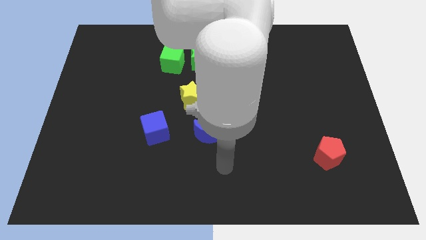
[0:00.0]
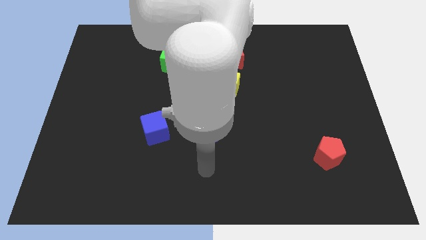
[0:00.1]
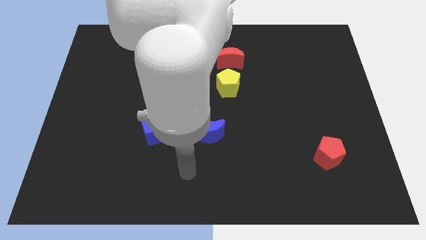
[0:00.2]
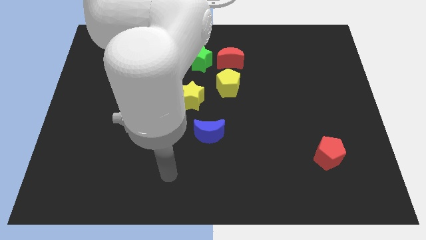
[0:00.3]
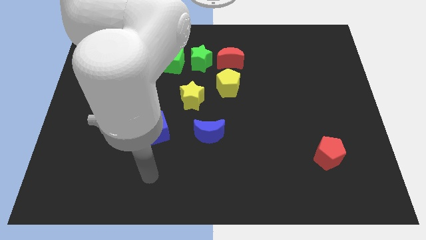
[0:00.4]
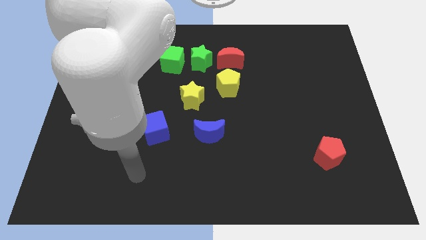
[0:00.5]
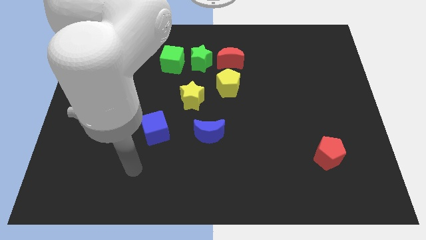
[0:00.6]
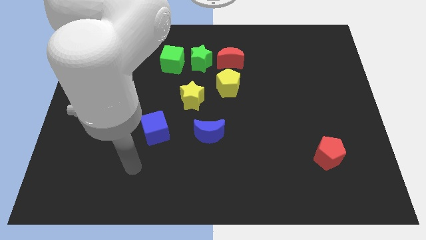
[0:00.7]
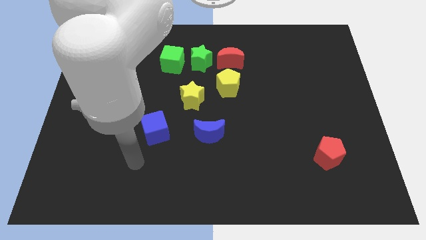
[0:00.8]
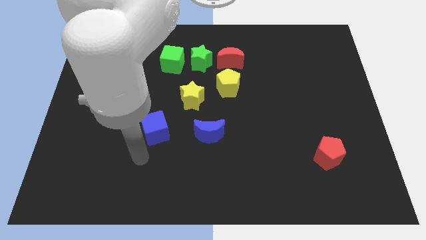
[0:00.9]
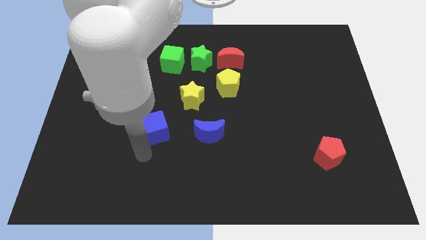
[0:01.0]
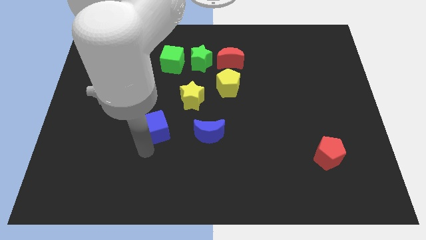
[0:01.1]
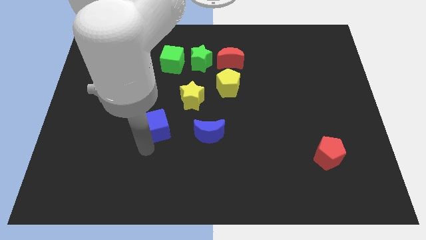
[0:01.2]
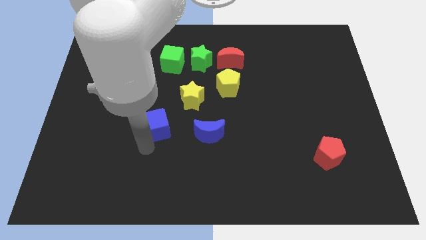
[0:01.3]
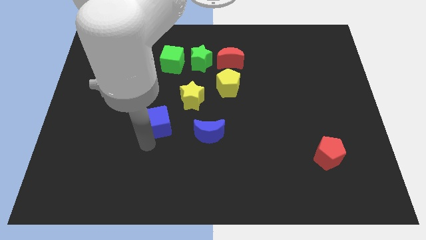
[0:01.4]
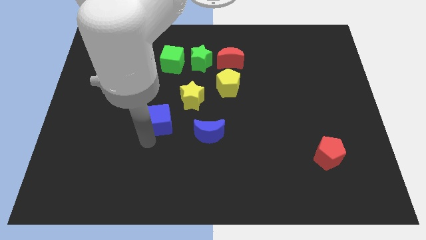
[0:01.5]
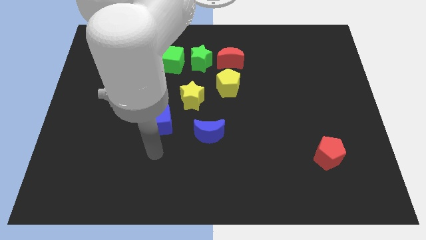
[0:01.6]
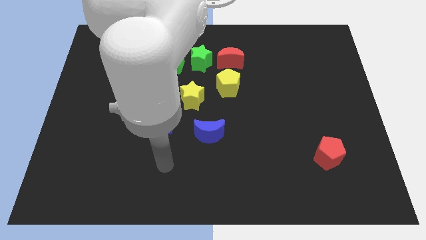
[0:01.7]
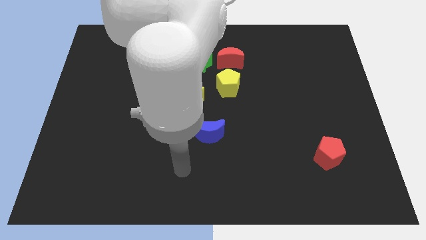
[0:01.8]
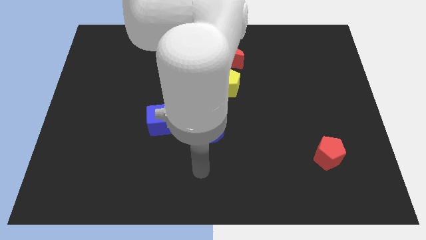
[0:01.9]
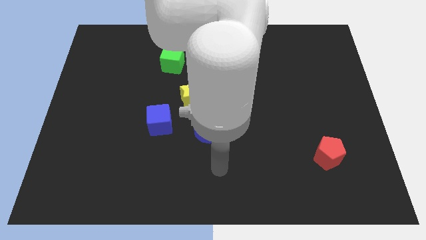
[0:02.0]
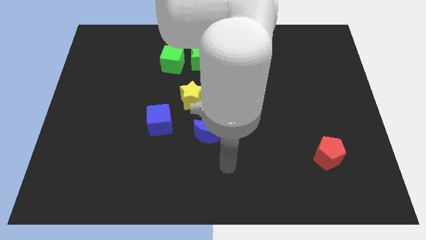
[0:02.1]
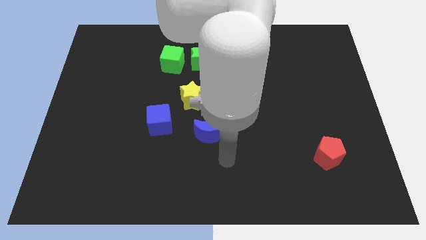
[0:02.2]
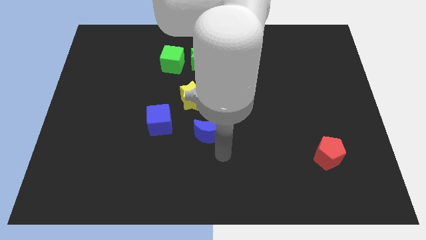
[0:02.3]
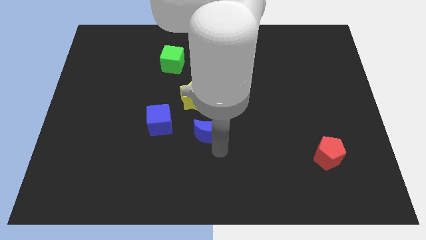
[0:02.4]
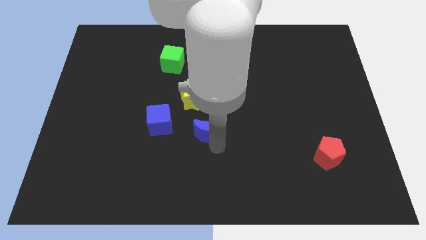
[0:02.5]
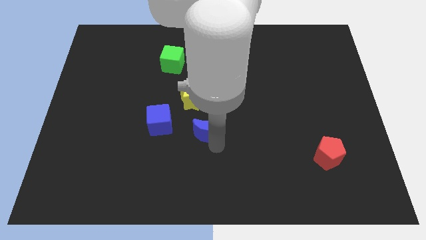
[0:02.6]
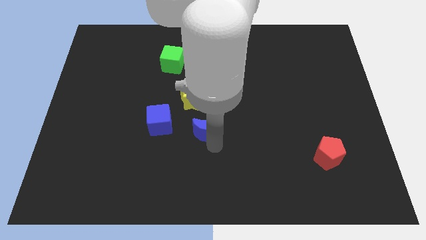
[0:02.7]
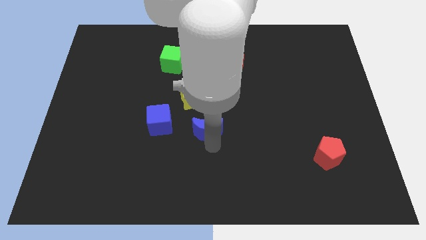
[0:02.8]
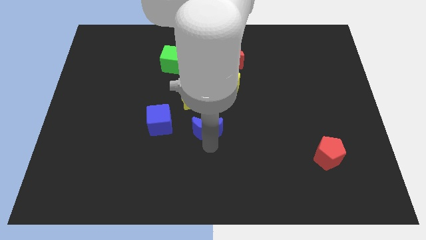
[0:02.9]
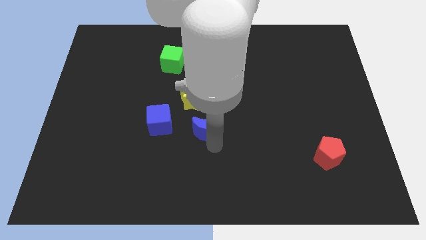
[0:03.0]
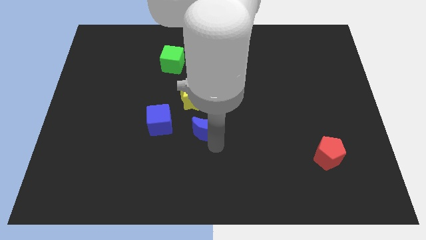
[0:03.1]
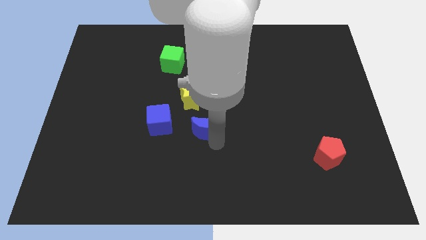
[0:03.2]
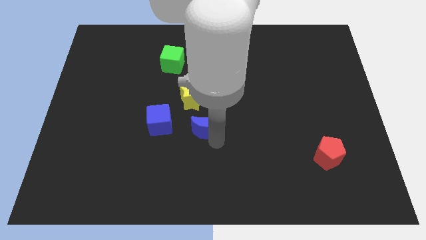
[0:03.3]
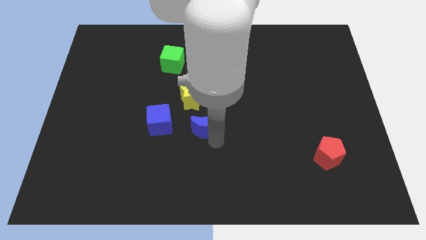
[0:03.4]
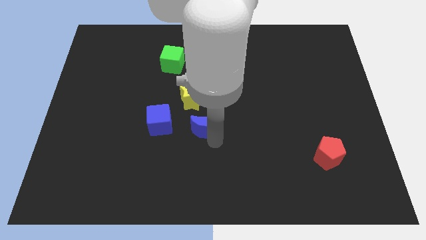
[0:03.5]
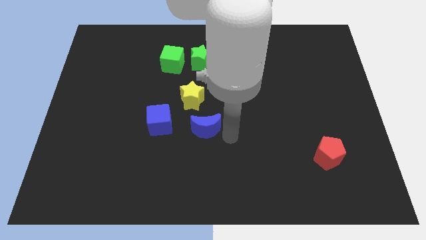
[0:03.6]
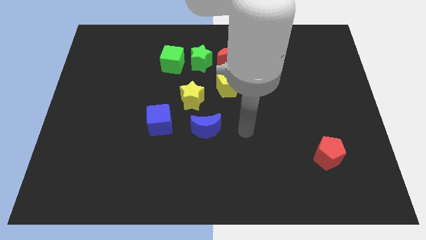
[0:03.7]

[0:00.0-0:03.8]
push blue moon to the bottom of yellow star

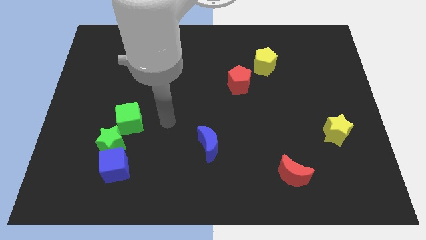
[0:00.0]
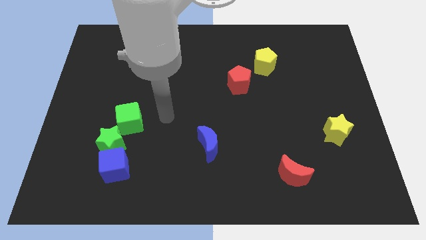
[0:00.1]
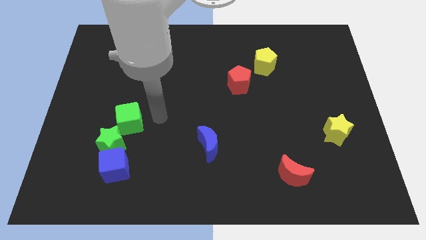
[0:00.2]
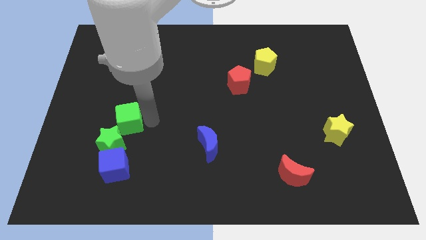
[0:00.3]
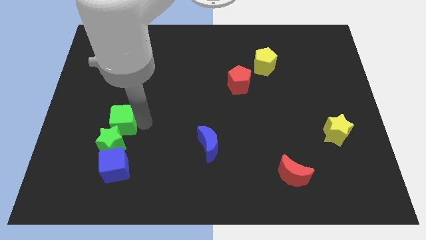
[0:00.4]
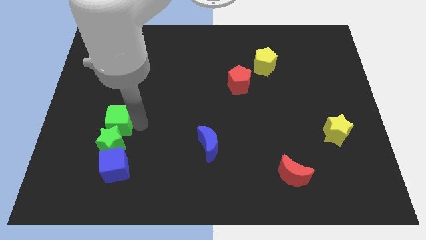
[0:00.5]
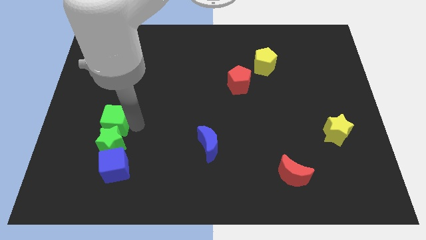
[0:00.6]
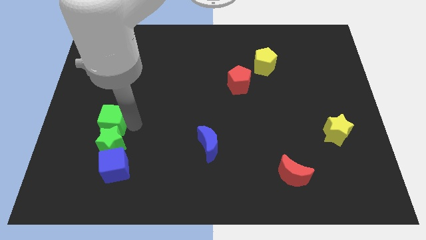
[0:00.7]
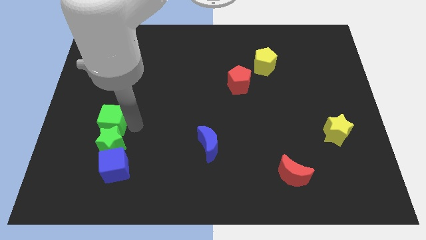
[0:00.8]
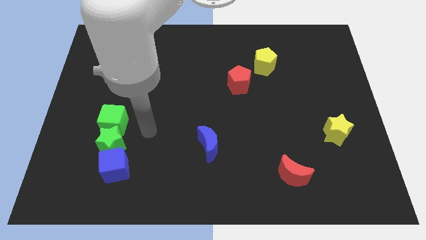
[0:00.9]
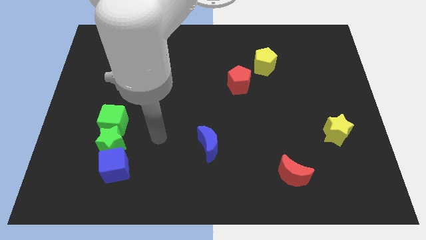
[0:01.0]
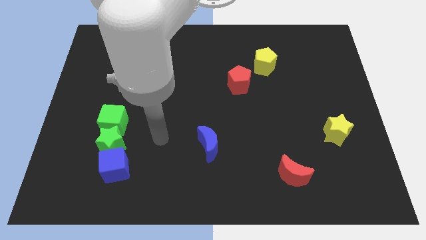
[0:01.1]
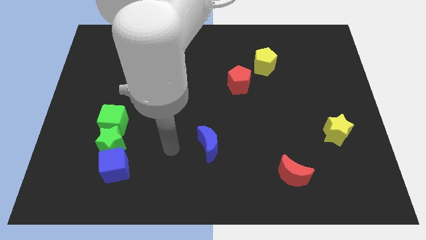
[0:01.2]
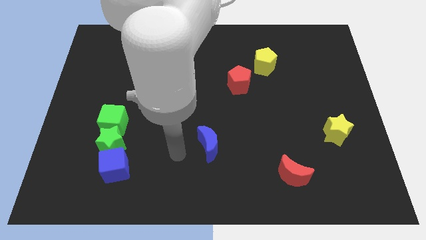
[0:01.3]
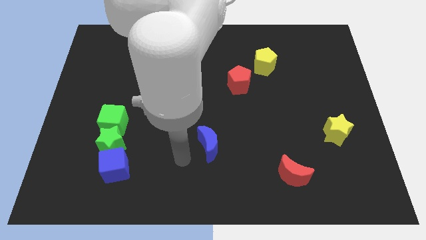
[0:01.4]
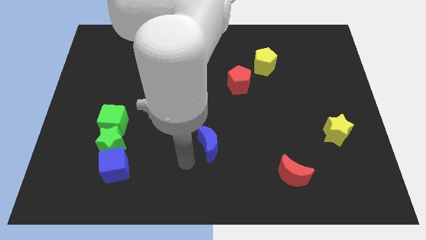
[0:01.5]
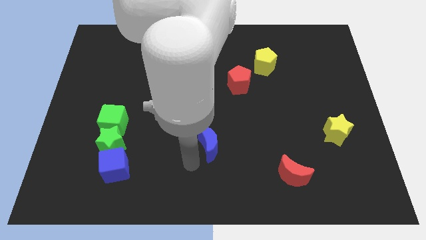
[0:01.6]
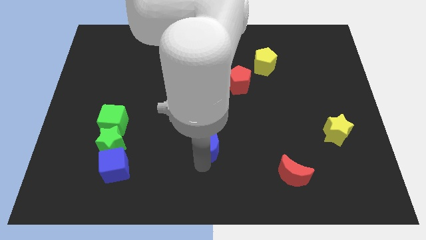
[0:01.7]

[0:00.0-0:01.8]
push the green cube to the top of the green star

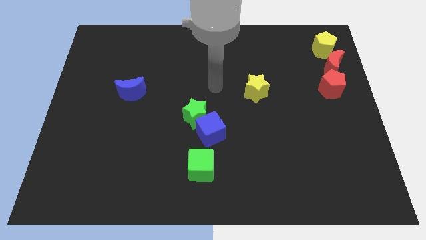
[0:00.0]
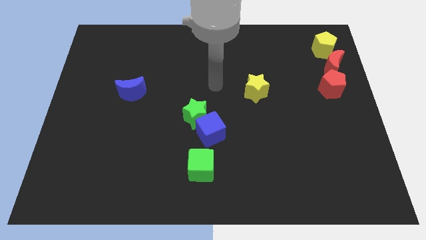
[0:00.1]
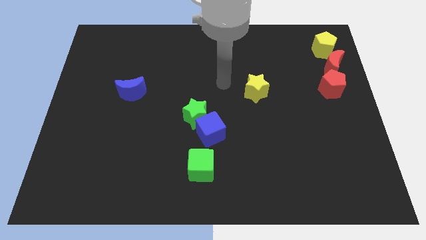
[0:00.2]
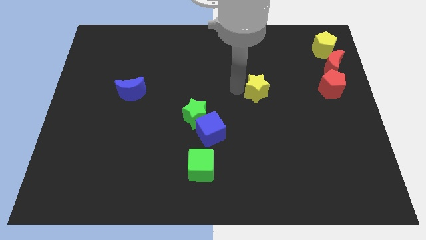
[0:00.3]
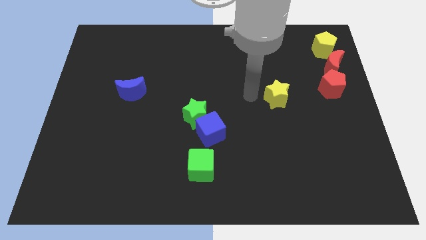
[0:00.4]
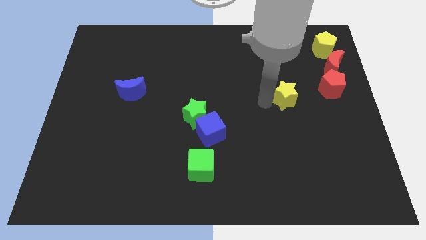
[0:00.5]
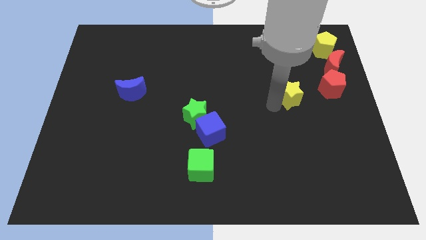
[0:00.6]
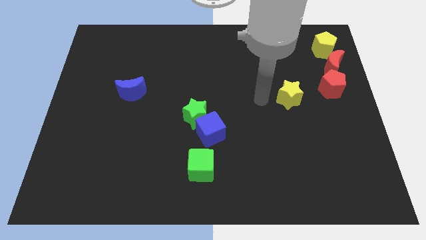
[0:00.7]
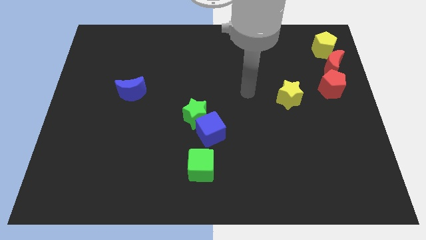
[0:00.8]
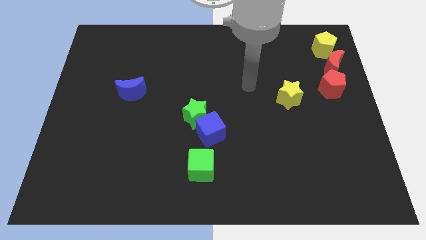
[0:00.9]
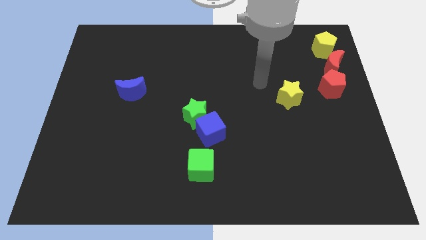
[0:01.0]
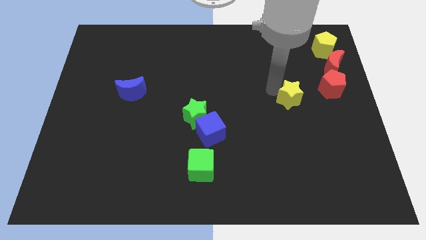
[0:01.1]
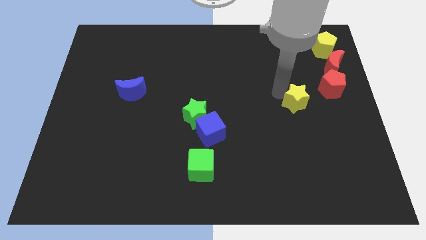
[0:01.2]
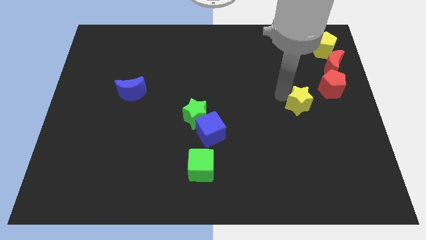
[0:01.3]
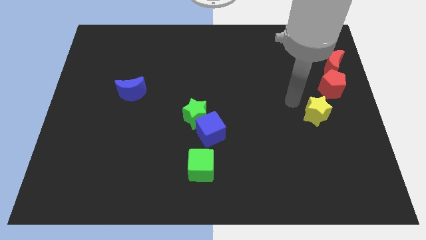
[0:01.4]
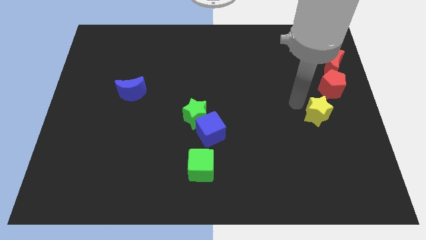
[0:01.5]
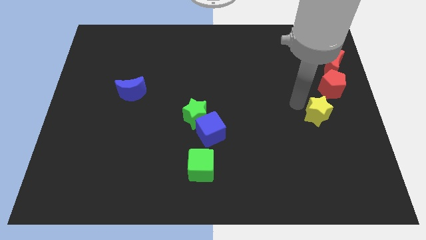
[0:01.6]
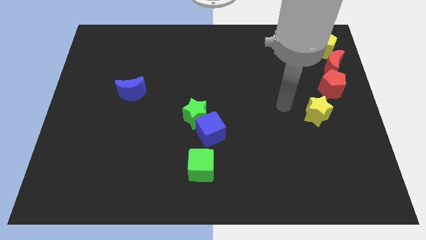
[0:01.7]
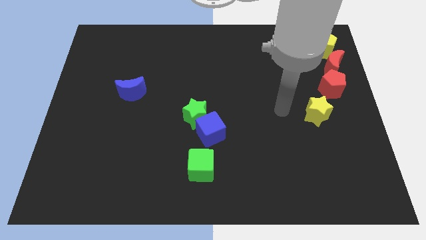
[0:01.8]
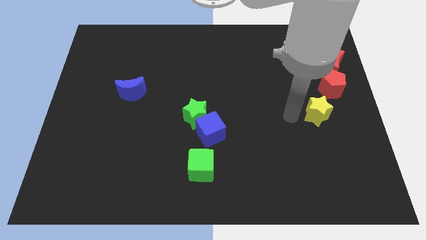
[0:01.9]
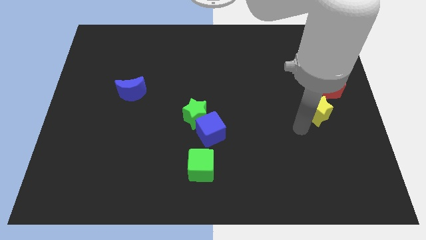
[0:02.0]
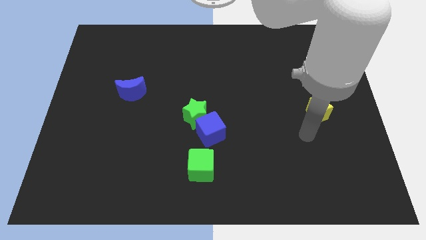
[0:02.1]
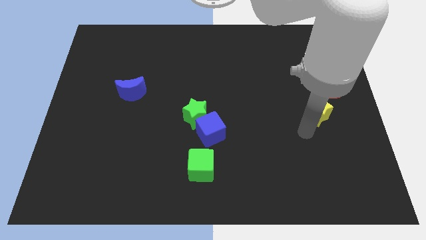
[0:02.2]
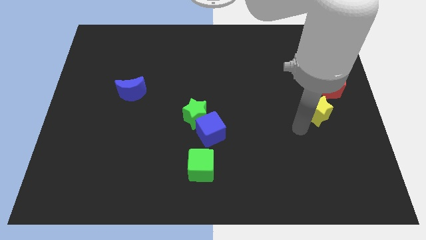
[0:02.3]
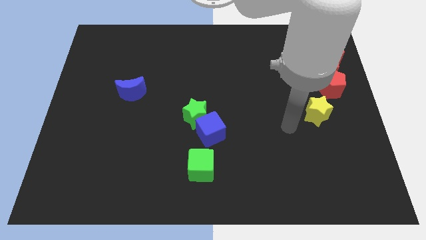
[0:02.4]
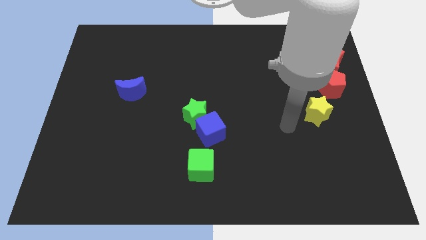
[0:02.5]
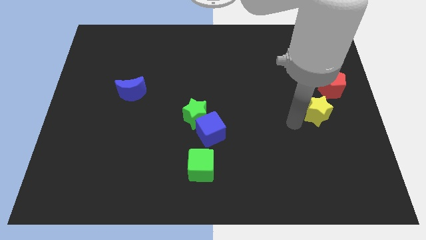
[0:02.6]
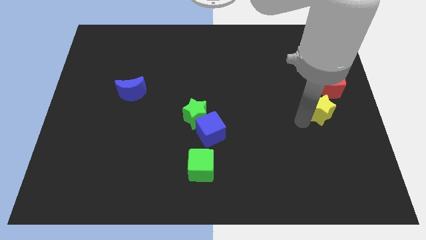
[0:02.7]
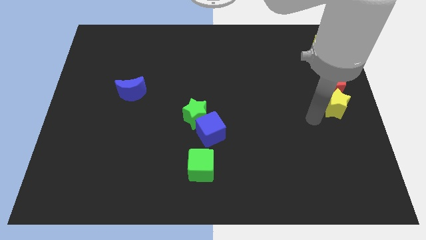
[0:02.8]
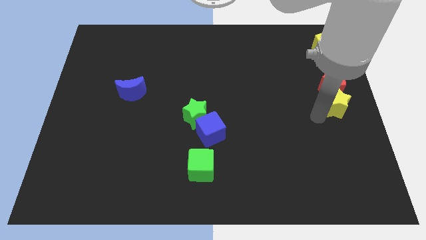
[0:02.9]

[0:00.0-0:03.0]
place yellow star below the red pentagon

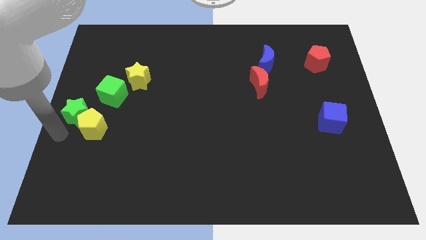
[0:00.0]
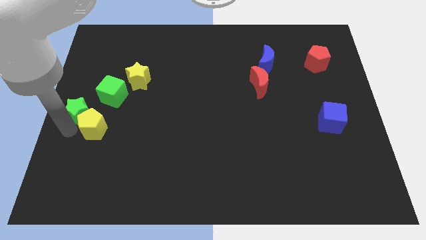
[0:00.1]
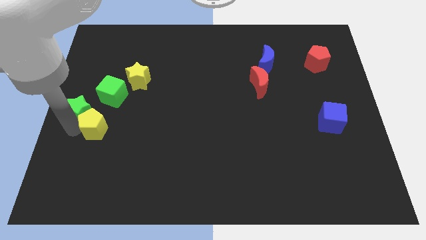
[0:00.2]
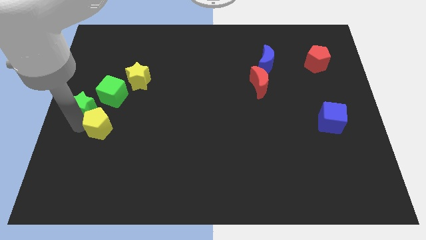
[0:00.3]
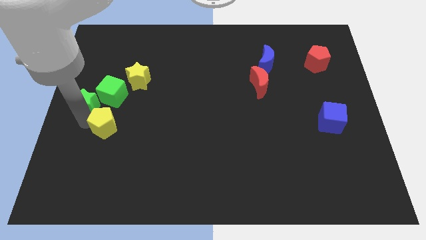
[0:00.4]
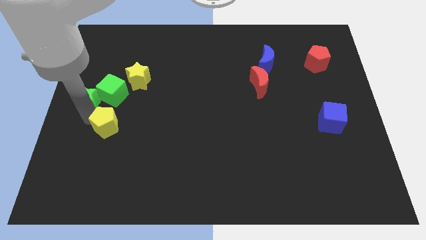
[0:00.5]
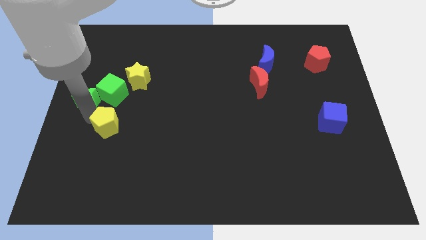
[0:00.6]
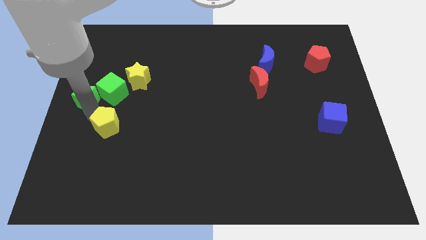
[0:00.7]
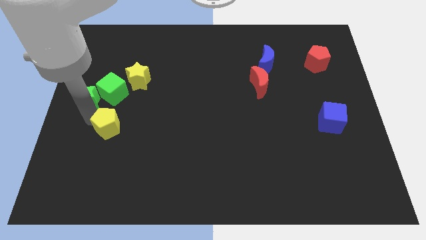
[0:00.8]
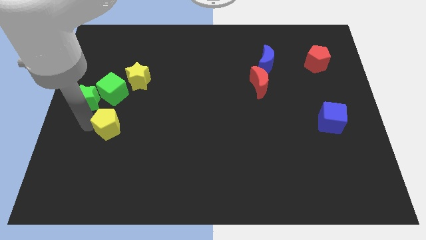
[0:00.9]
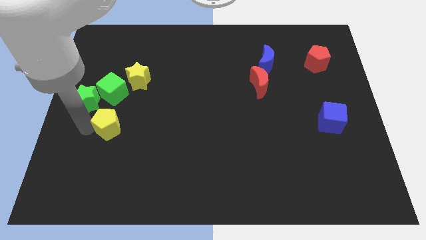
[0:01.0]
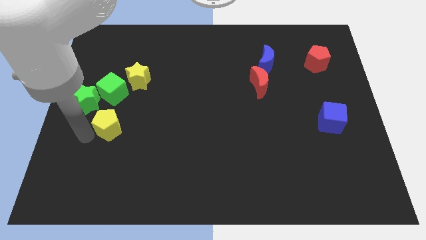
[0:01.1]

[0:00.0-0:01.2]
separate the green star and the yellow pentagon
